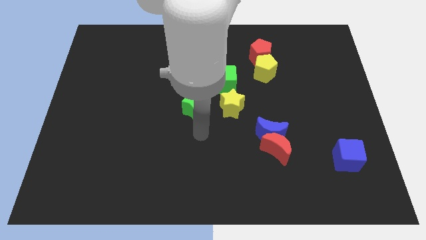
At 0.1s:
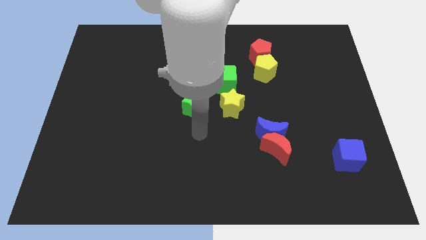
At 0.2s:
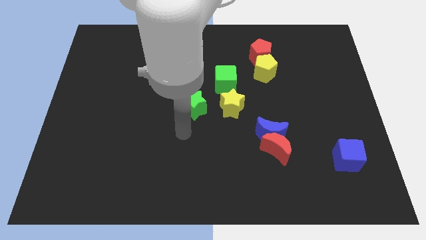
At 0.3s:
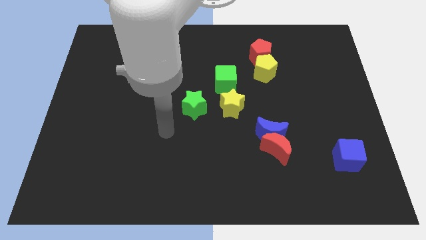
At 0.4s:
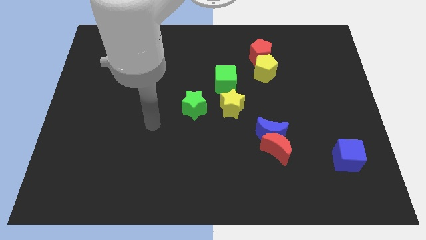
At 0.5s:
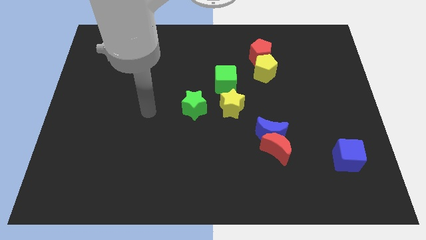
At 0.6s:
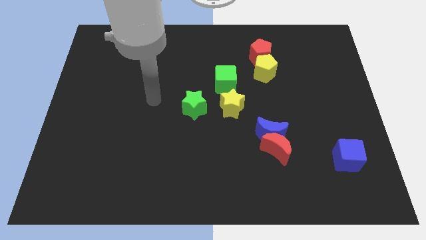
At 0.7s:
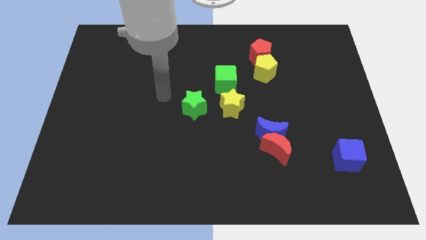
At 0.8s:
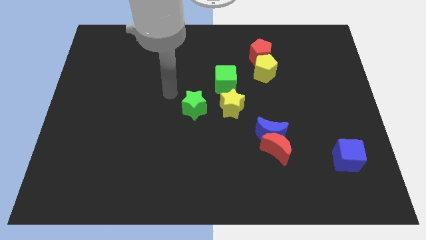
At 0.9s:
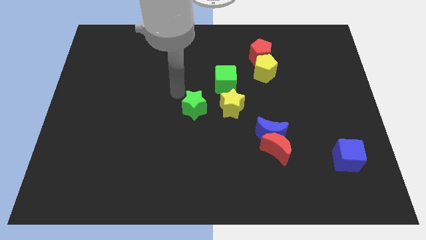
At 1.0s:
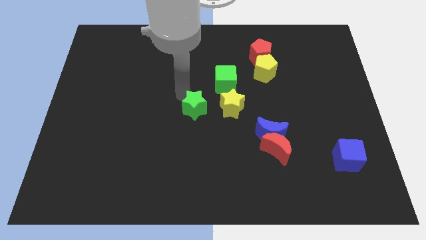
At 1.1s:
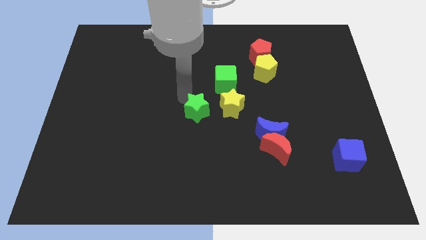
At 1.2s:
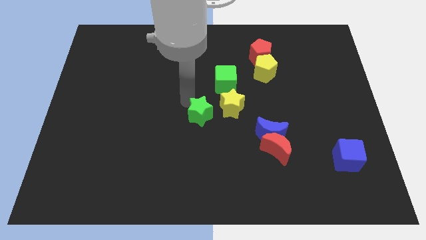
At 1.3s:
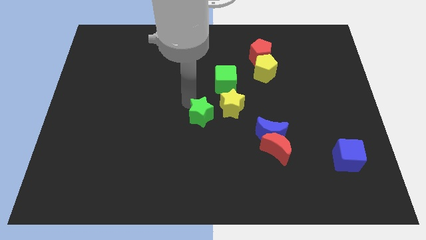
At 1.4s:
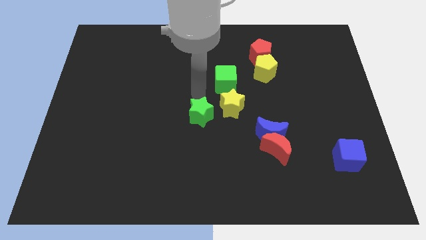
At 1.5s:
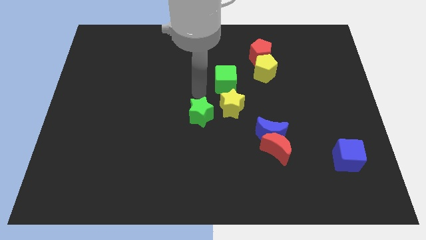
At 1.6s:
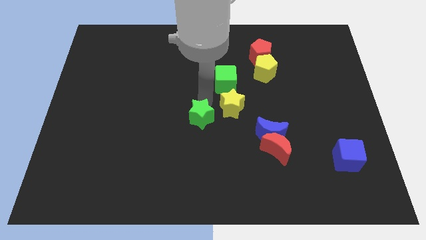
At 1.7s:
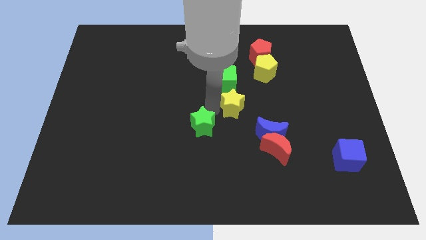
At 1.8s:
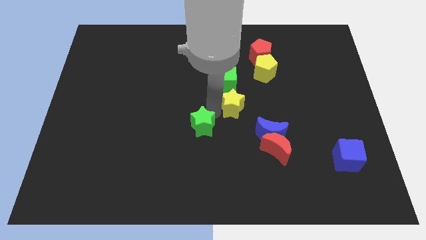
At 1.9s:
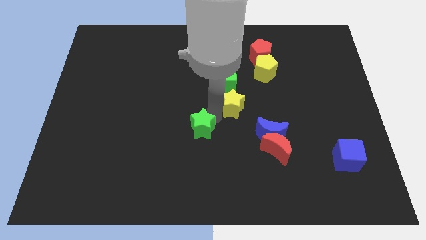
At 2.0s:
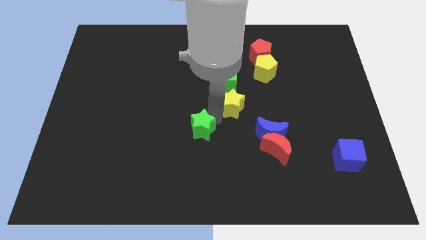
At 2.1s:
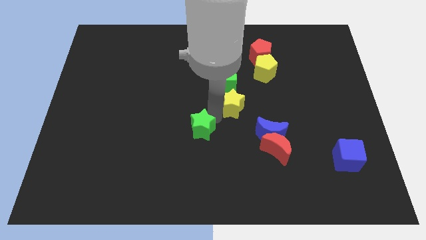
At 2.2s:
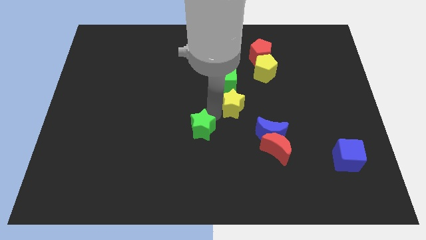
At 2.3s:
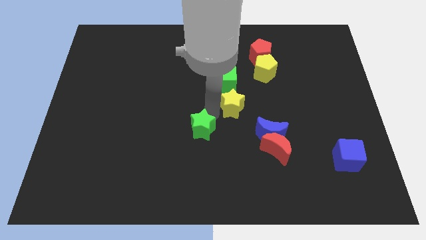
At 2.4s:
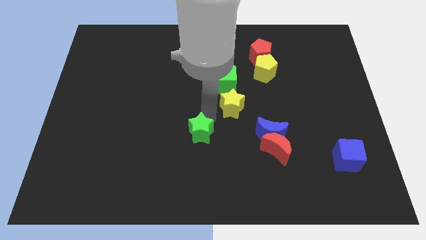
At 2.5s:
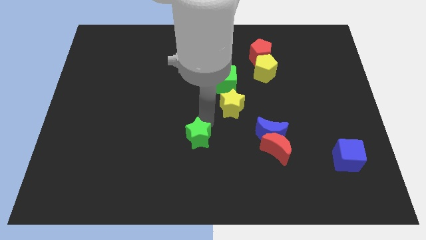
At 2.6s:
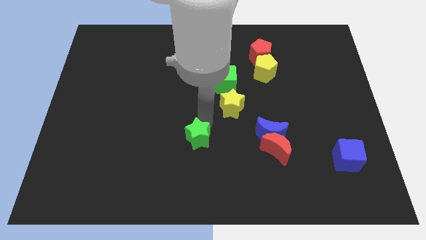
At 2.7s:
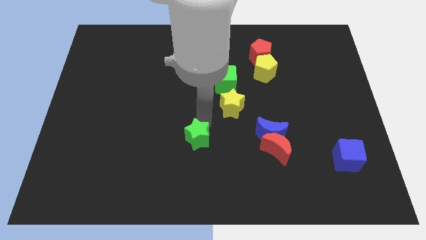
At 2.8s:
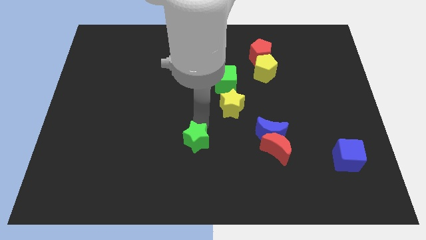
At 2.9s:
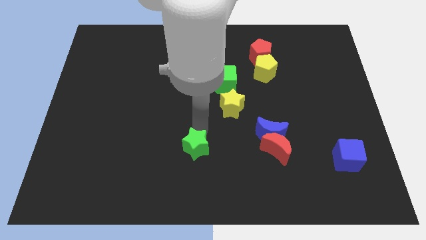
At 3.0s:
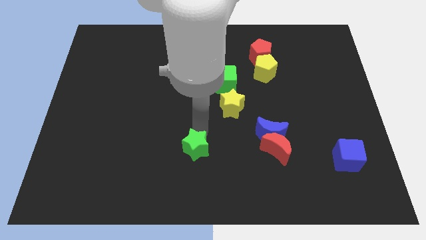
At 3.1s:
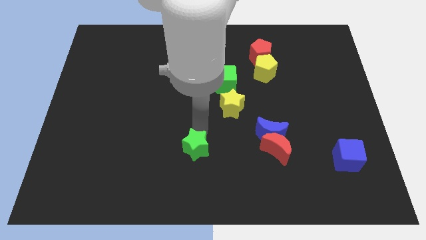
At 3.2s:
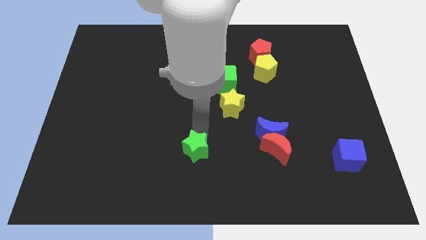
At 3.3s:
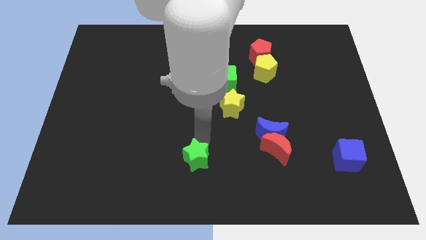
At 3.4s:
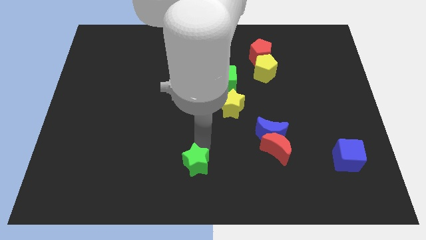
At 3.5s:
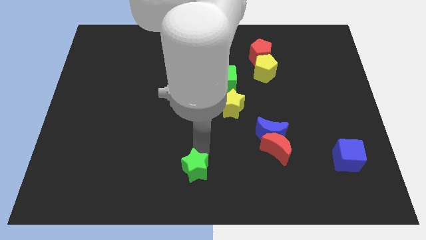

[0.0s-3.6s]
move the green star slightly to the bottom

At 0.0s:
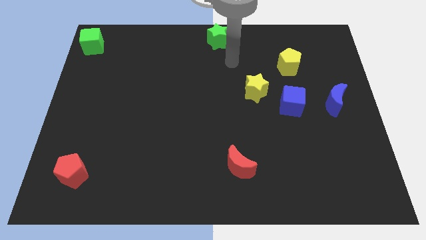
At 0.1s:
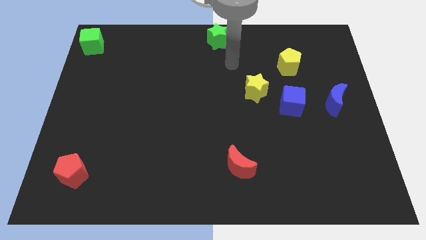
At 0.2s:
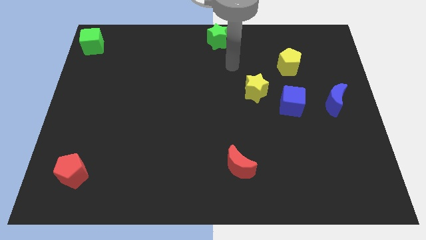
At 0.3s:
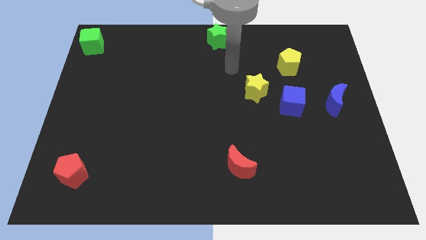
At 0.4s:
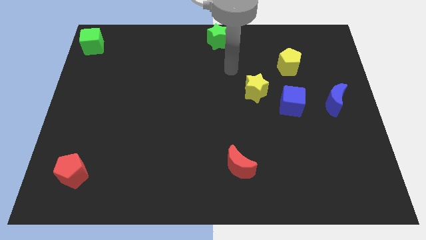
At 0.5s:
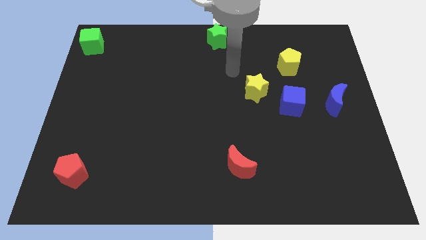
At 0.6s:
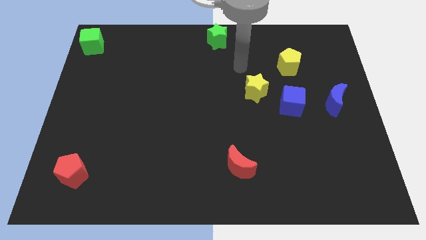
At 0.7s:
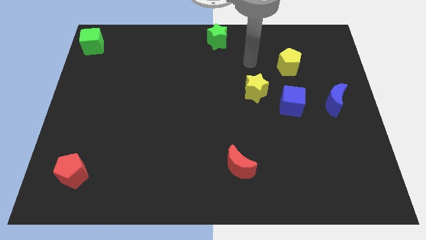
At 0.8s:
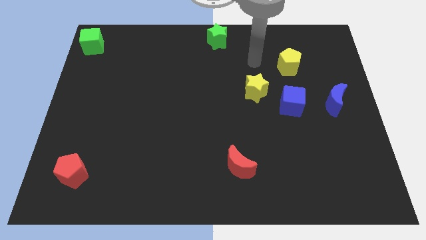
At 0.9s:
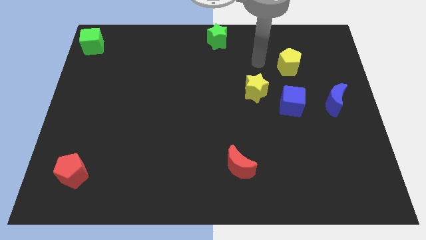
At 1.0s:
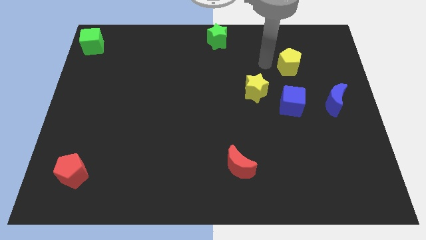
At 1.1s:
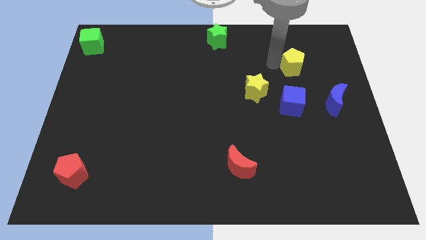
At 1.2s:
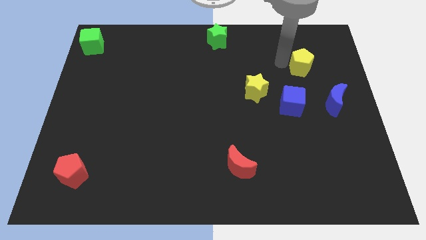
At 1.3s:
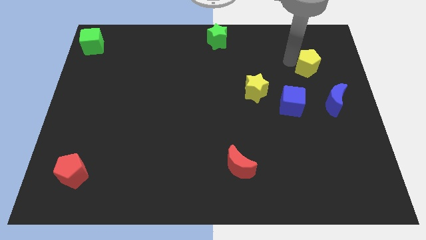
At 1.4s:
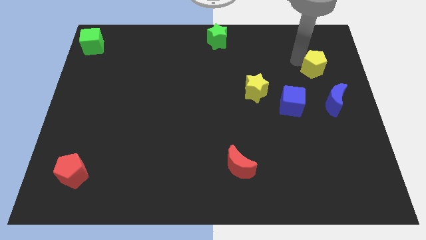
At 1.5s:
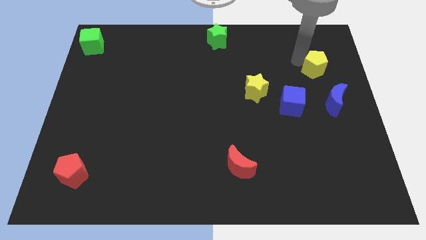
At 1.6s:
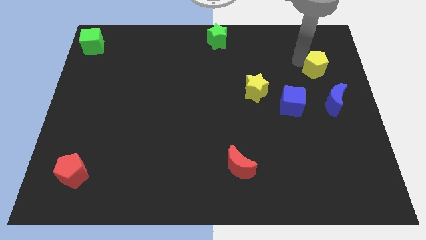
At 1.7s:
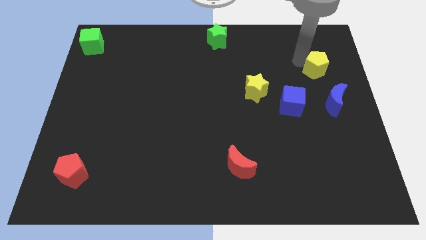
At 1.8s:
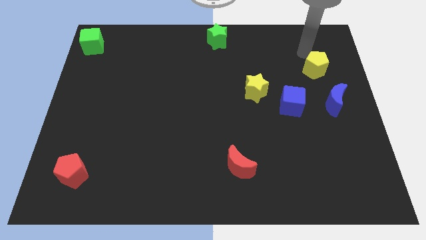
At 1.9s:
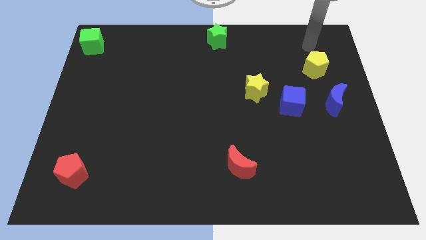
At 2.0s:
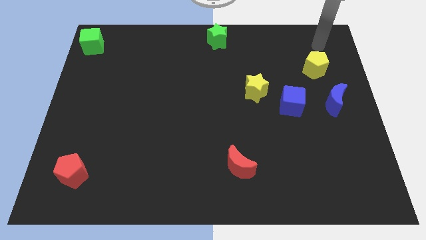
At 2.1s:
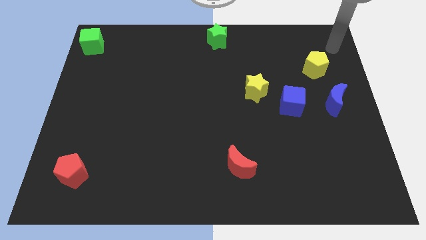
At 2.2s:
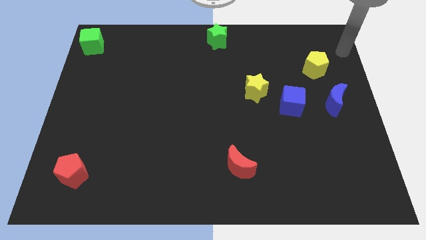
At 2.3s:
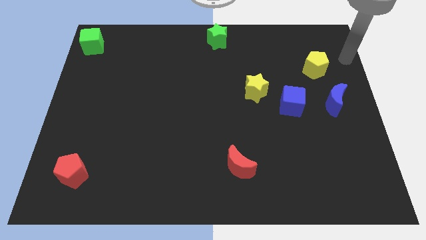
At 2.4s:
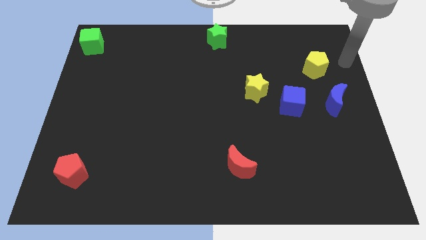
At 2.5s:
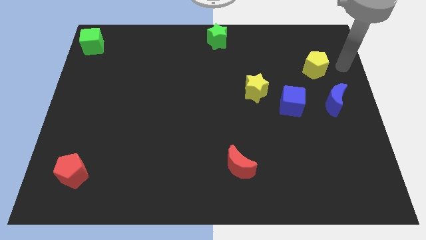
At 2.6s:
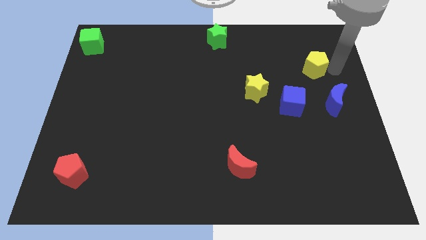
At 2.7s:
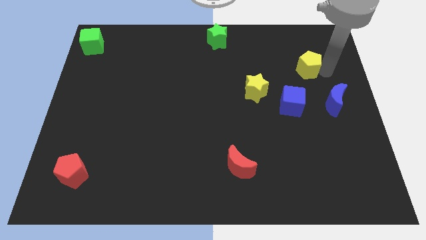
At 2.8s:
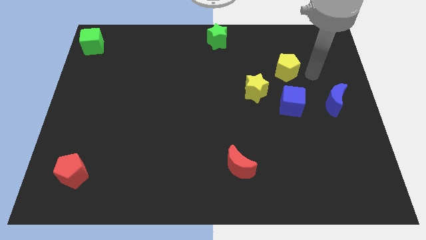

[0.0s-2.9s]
push the yellow pentagon to the top of the blue cube

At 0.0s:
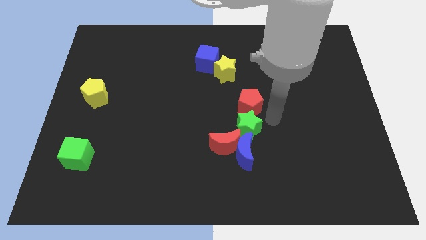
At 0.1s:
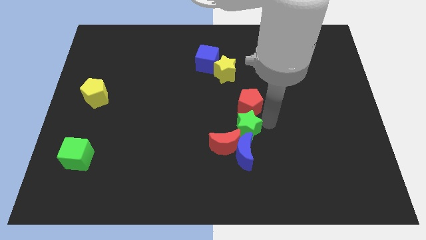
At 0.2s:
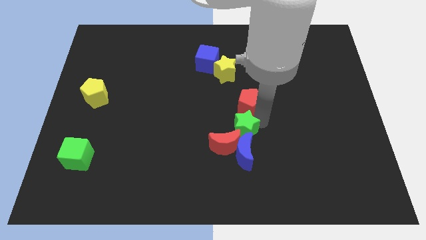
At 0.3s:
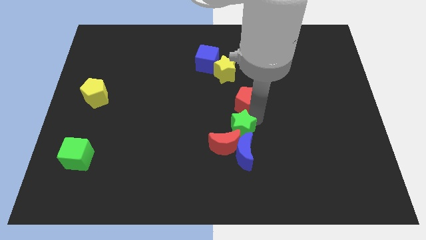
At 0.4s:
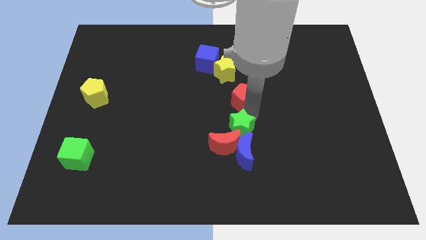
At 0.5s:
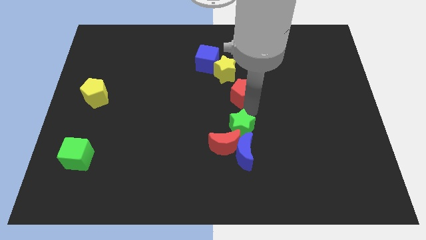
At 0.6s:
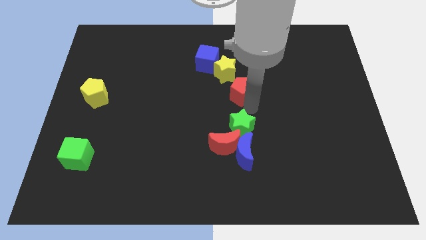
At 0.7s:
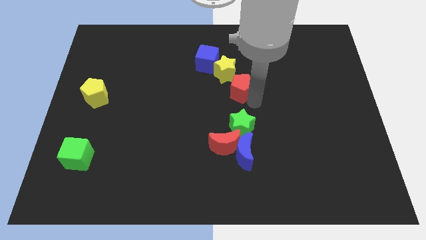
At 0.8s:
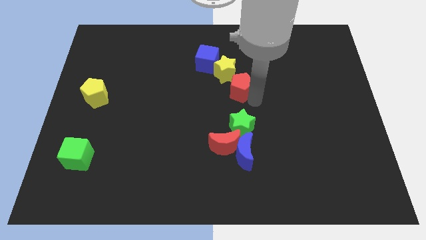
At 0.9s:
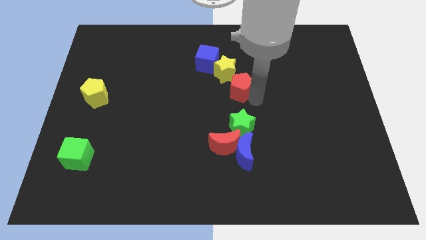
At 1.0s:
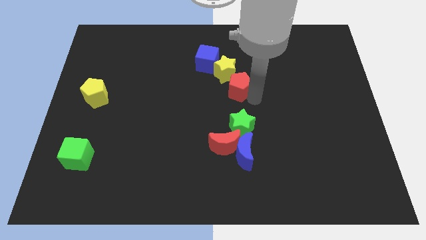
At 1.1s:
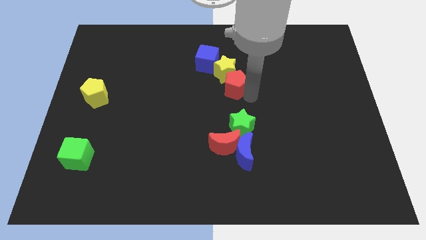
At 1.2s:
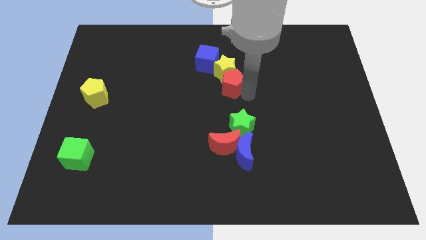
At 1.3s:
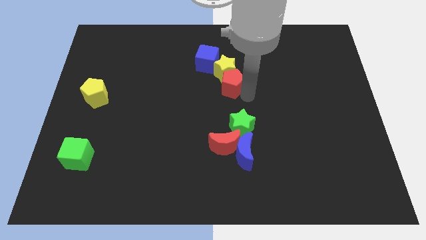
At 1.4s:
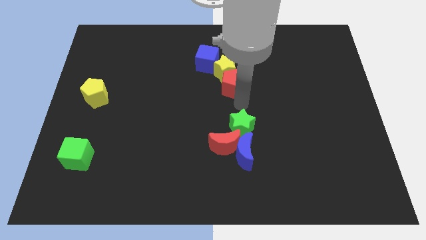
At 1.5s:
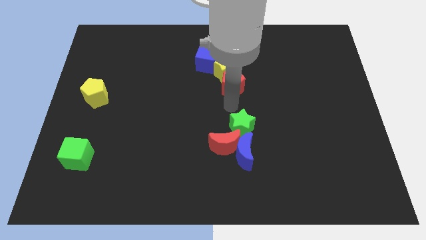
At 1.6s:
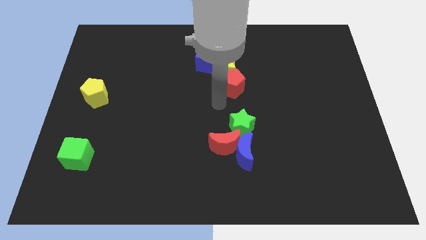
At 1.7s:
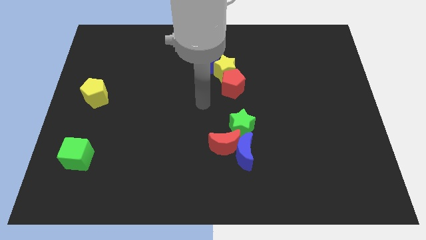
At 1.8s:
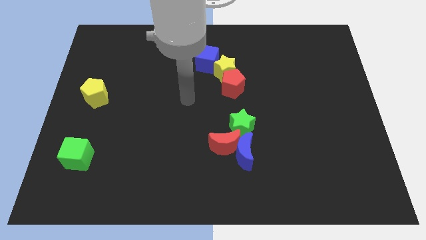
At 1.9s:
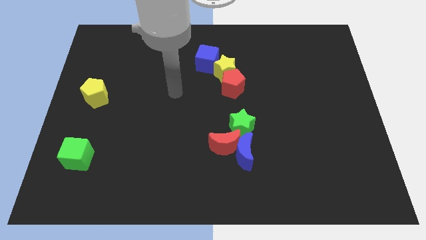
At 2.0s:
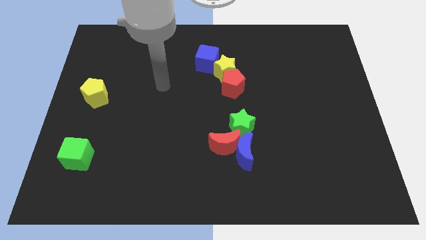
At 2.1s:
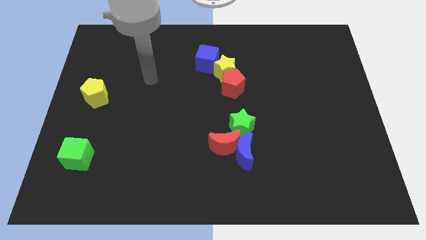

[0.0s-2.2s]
slide red pentagon into yellow star
